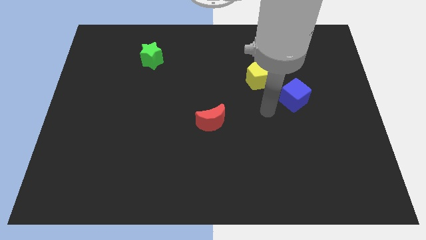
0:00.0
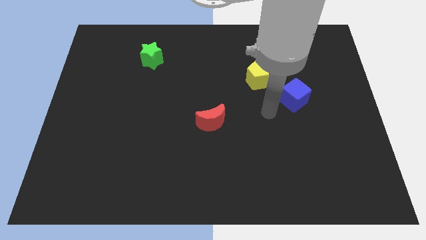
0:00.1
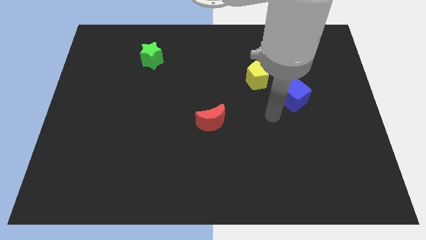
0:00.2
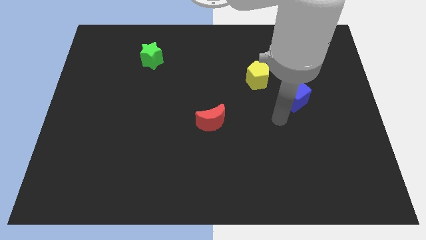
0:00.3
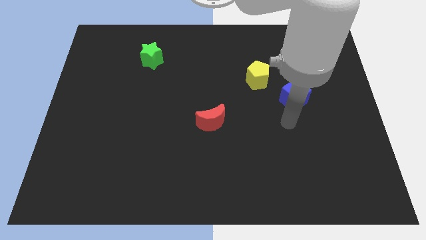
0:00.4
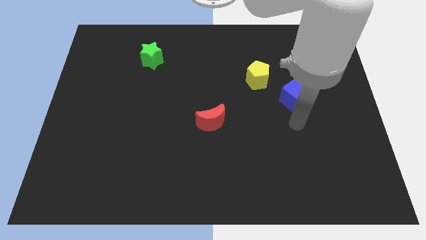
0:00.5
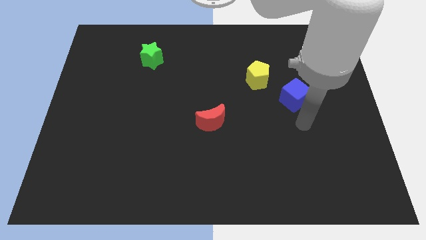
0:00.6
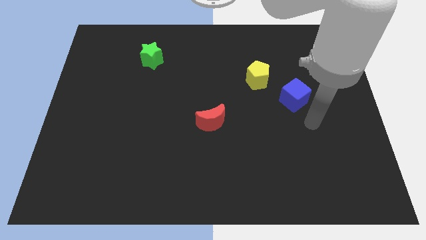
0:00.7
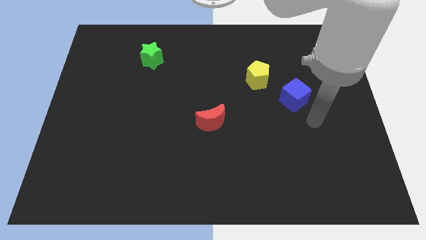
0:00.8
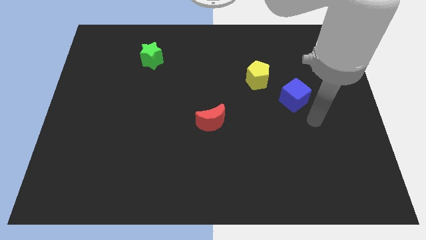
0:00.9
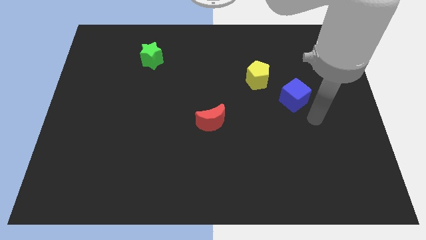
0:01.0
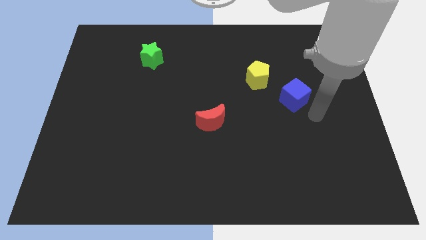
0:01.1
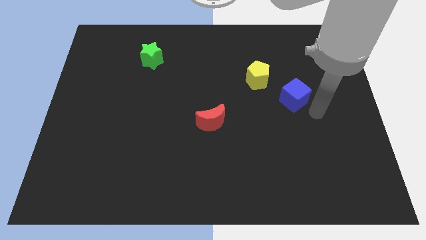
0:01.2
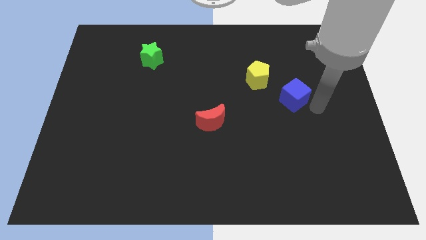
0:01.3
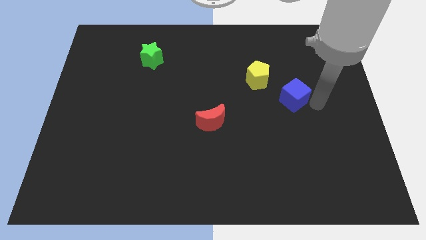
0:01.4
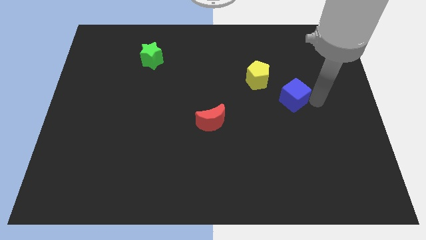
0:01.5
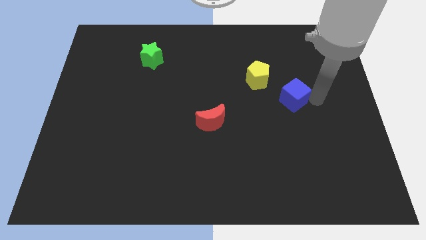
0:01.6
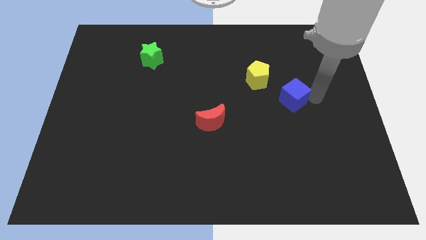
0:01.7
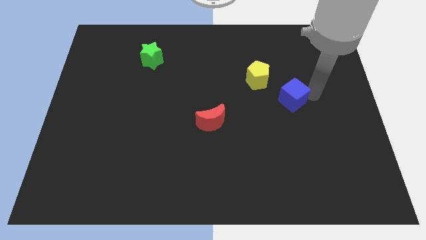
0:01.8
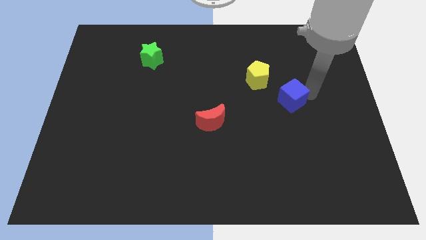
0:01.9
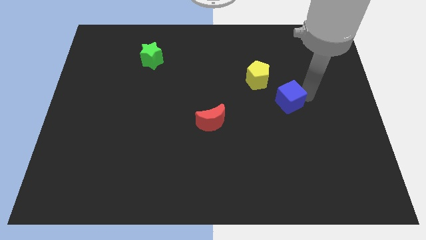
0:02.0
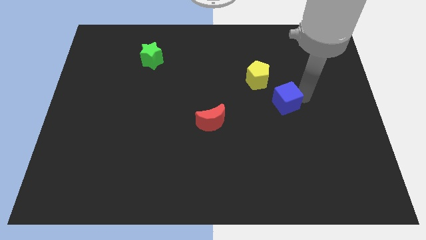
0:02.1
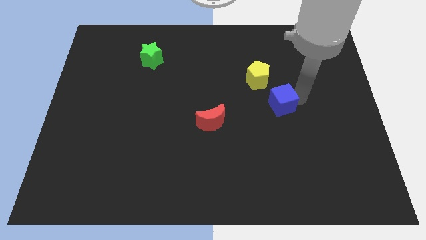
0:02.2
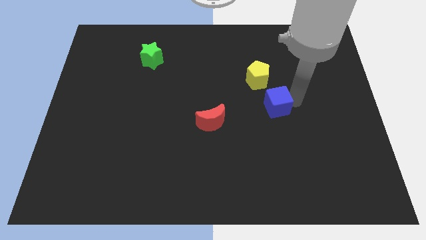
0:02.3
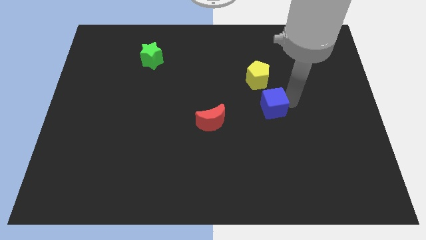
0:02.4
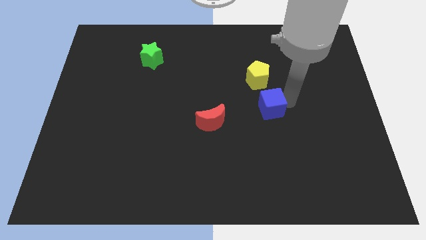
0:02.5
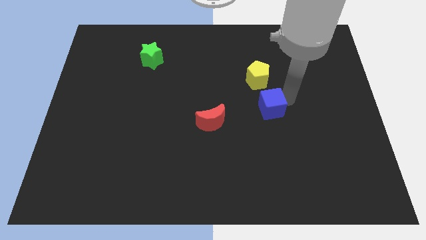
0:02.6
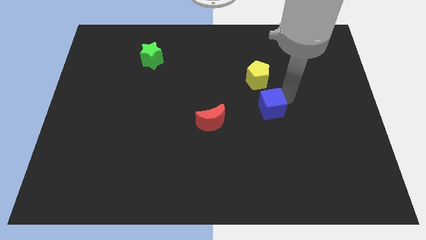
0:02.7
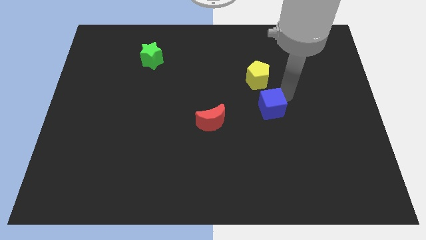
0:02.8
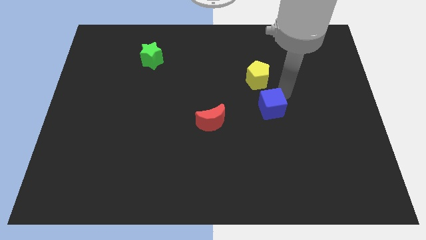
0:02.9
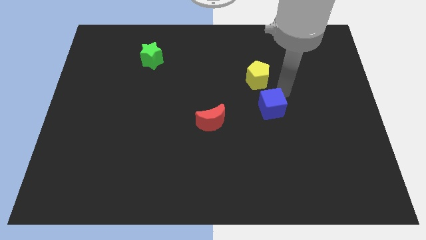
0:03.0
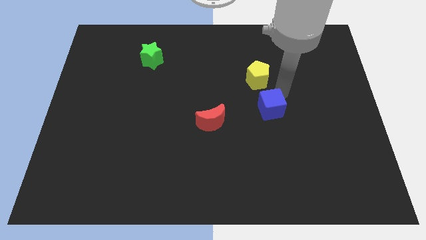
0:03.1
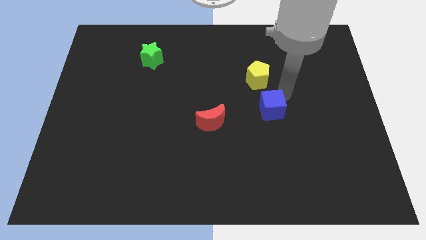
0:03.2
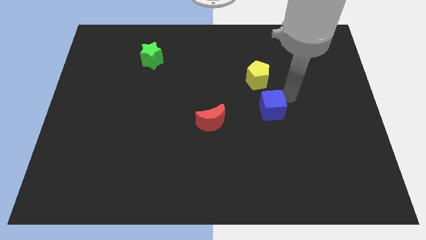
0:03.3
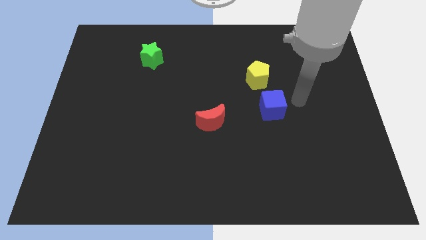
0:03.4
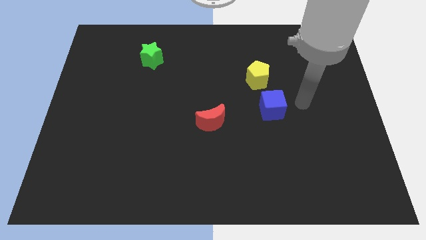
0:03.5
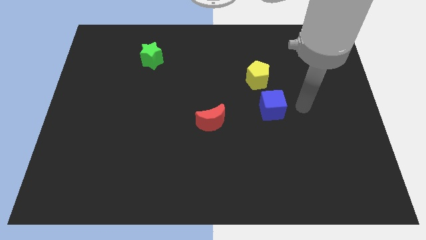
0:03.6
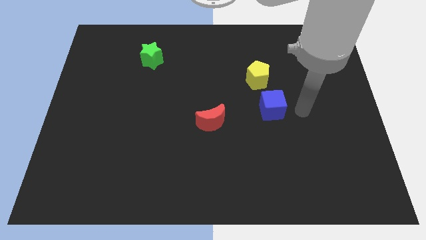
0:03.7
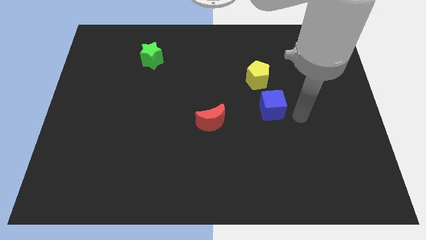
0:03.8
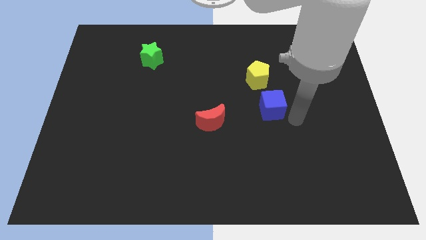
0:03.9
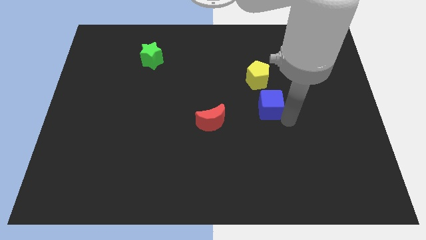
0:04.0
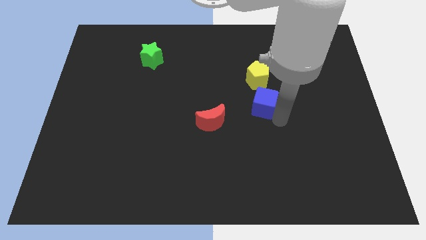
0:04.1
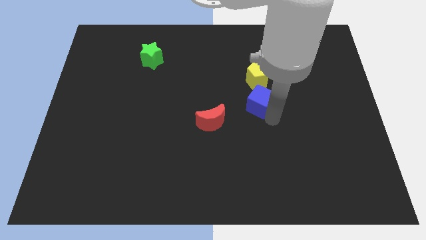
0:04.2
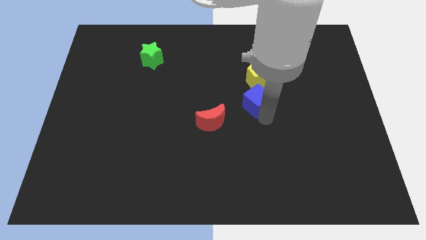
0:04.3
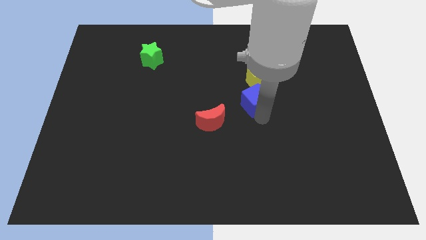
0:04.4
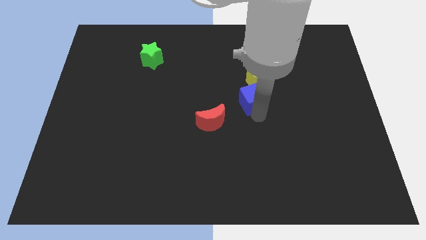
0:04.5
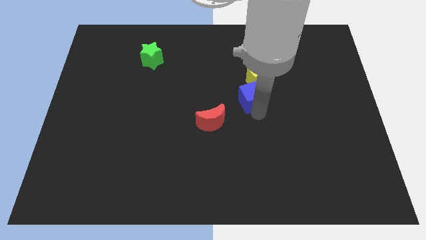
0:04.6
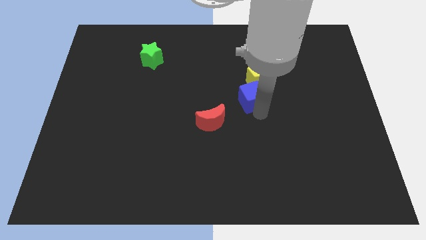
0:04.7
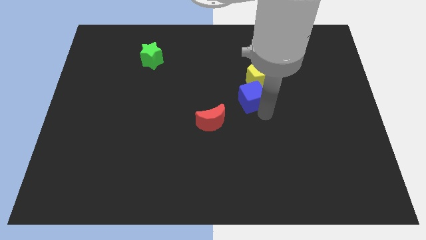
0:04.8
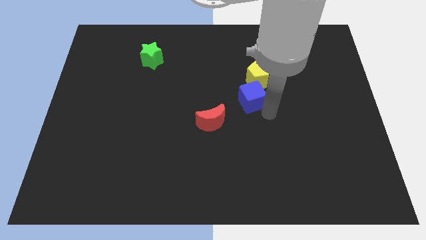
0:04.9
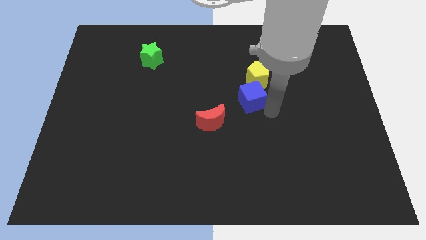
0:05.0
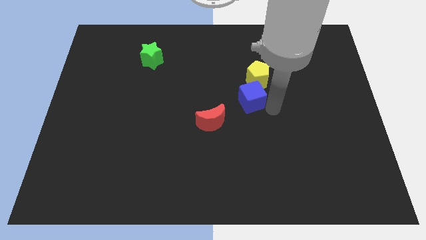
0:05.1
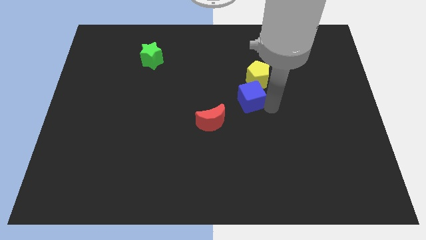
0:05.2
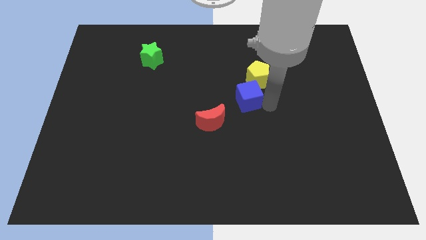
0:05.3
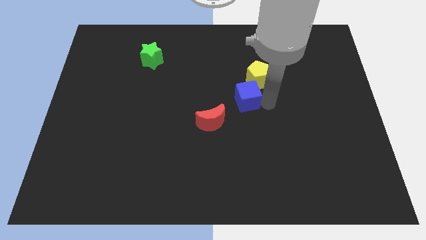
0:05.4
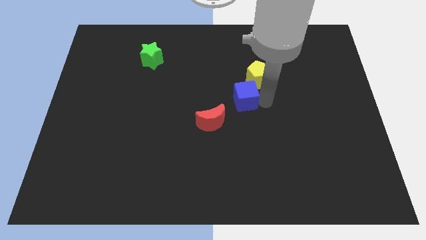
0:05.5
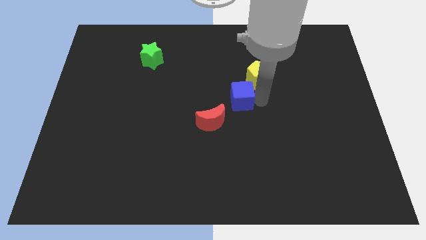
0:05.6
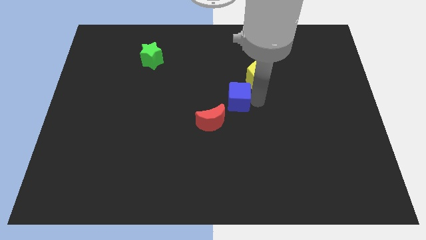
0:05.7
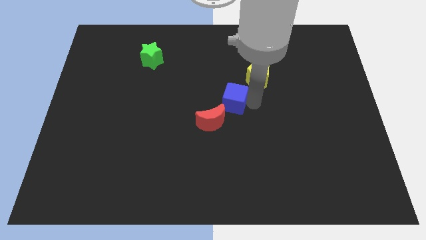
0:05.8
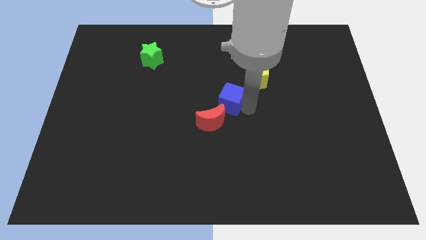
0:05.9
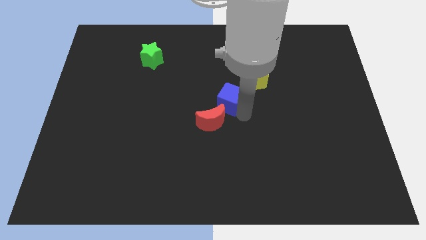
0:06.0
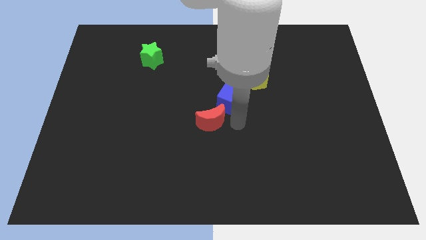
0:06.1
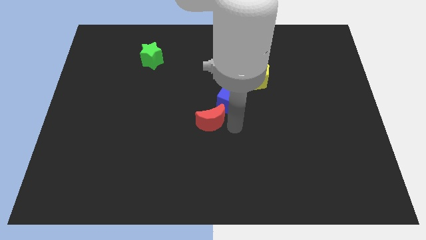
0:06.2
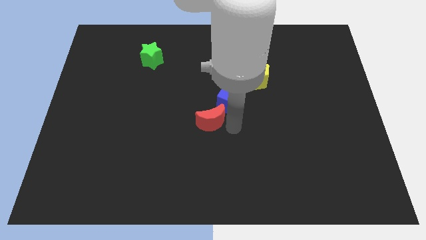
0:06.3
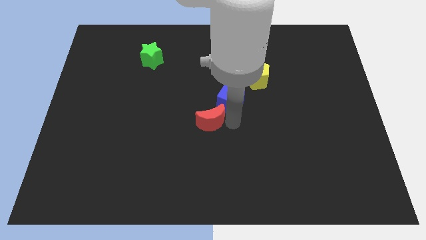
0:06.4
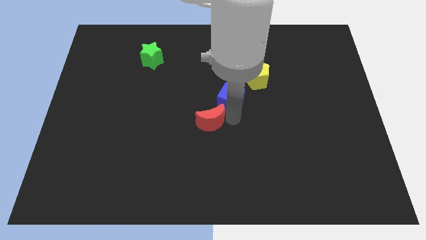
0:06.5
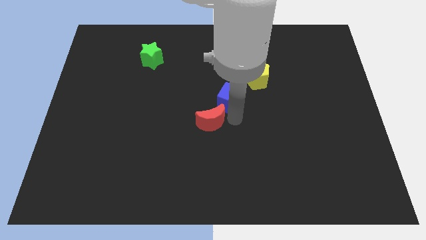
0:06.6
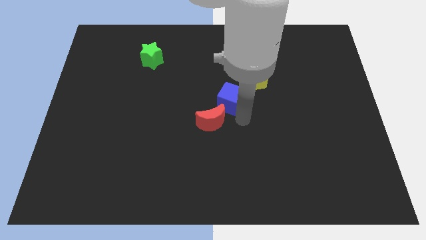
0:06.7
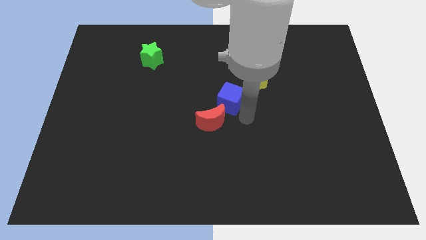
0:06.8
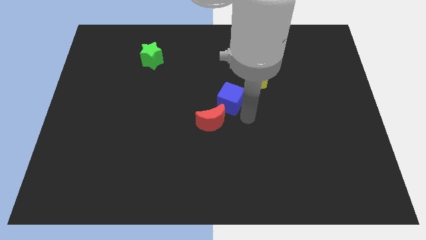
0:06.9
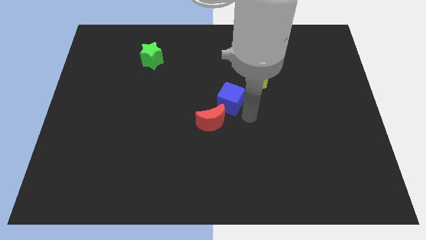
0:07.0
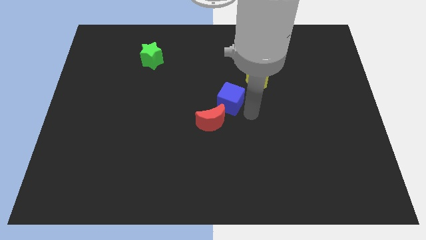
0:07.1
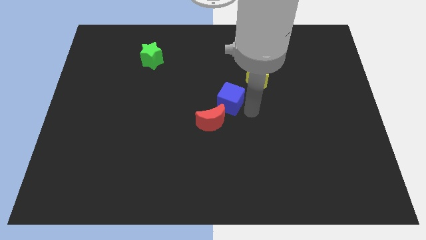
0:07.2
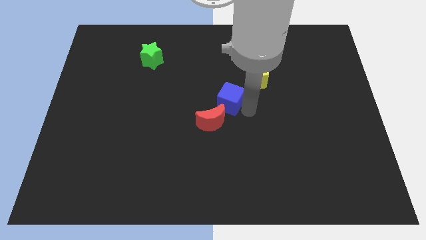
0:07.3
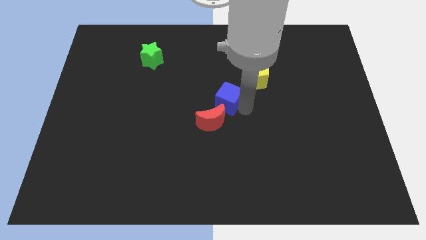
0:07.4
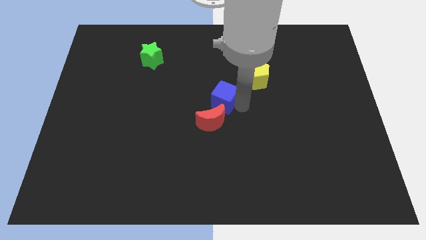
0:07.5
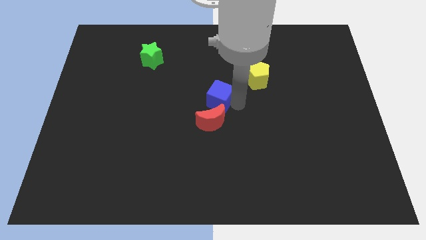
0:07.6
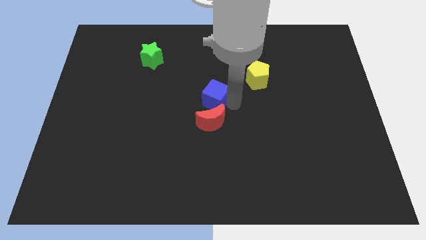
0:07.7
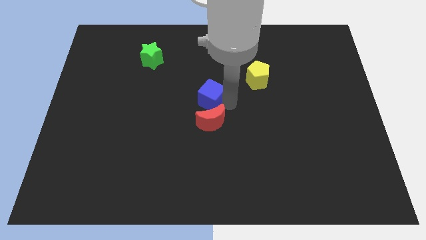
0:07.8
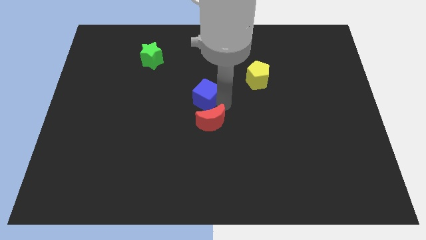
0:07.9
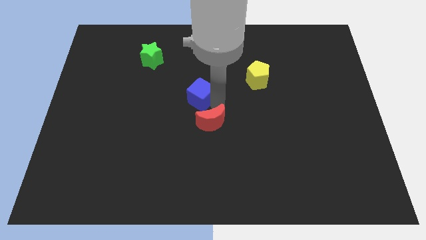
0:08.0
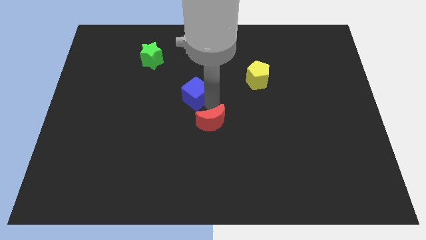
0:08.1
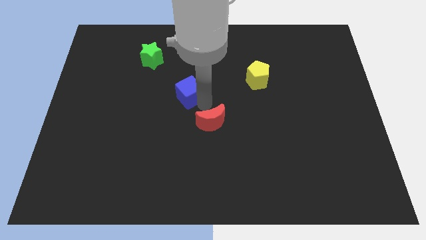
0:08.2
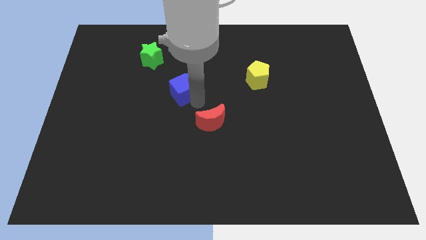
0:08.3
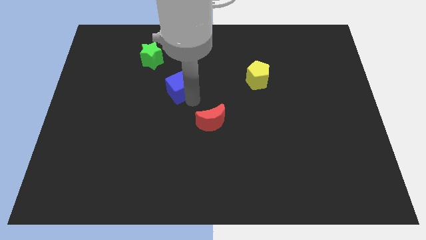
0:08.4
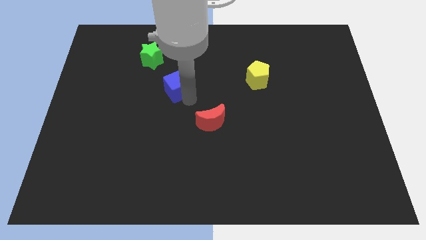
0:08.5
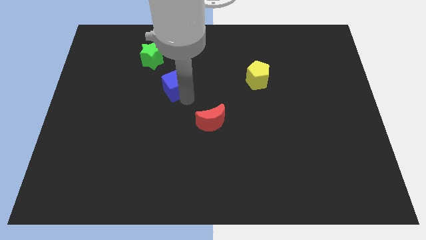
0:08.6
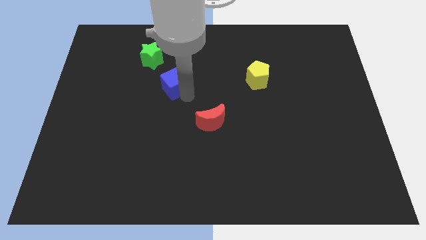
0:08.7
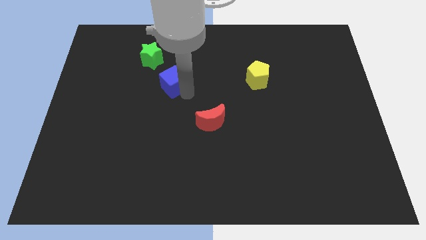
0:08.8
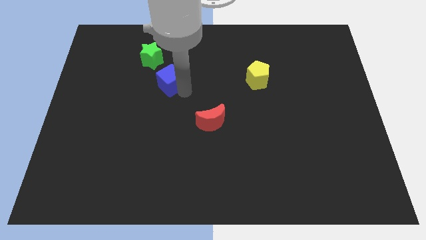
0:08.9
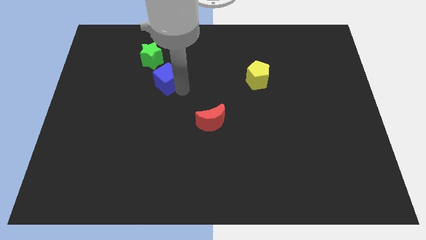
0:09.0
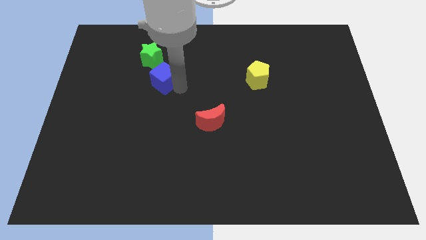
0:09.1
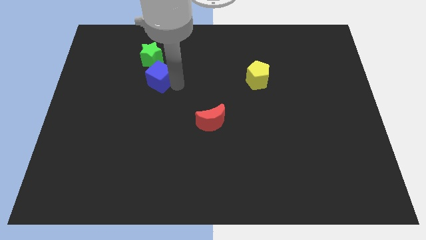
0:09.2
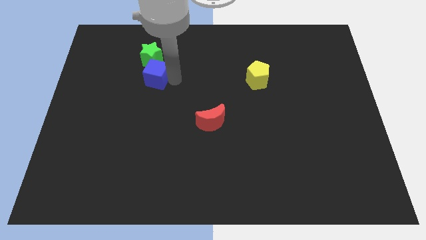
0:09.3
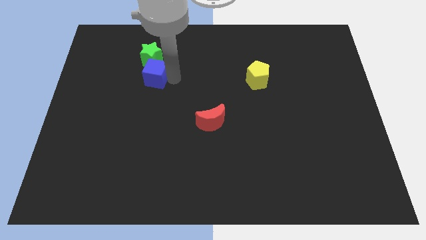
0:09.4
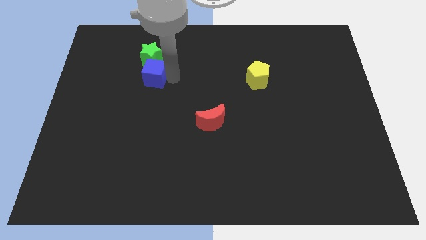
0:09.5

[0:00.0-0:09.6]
slide the blue cube close to the green block
